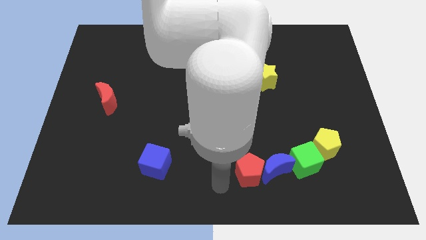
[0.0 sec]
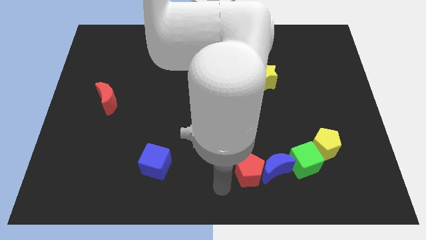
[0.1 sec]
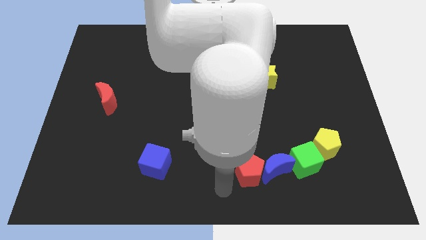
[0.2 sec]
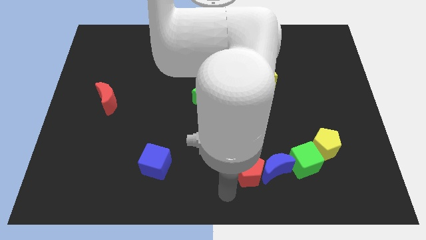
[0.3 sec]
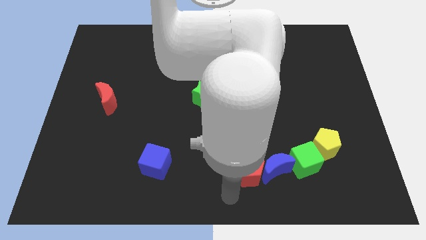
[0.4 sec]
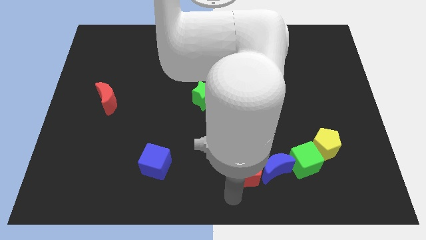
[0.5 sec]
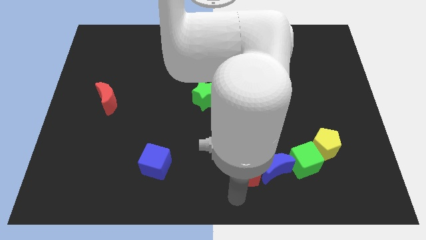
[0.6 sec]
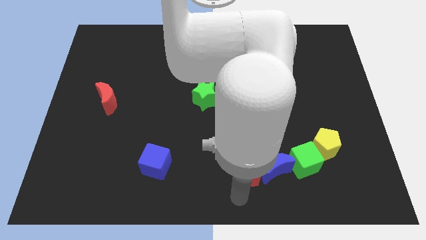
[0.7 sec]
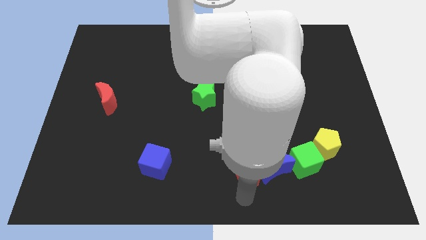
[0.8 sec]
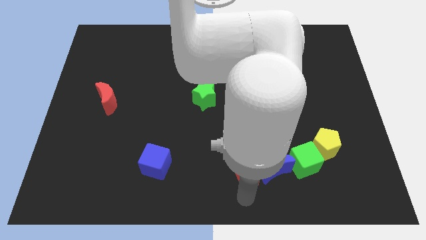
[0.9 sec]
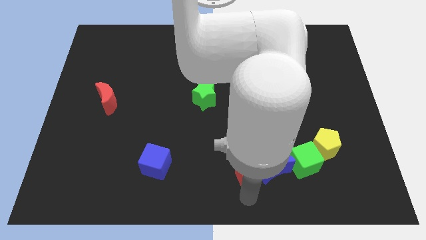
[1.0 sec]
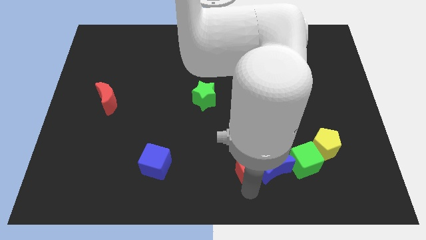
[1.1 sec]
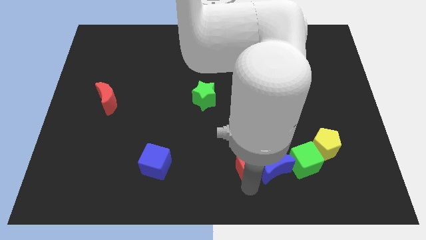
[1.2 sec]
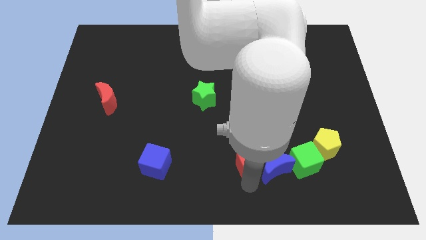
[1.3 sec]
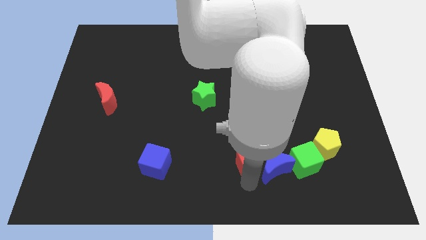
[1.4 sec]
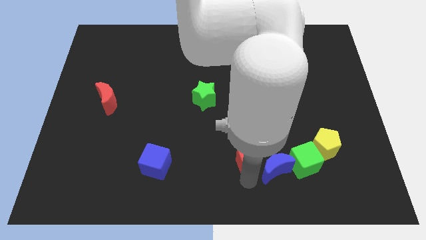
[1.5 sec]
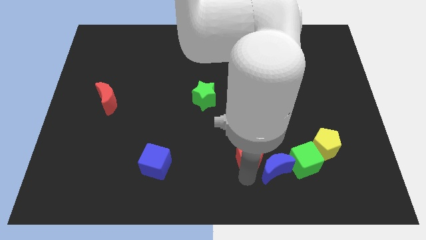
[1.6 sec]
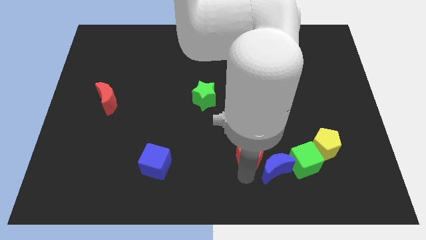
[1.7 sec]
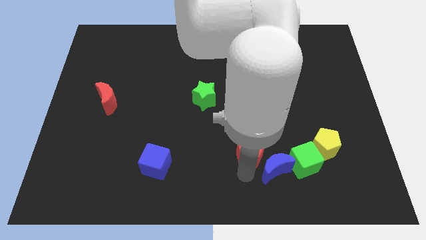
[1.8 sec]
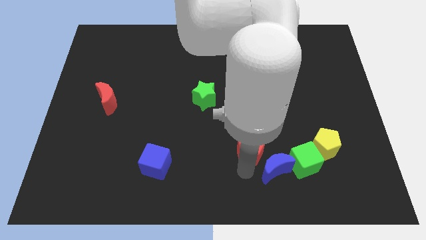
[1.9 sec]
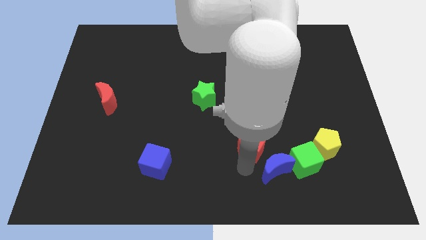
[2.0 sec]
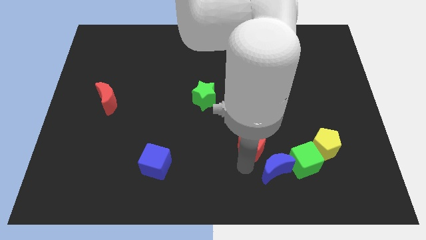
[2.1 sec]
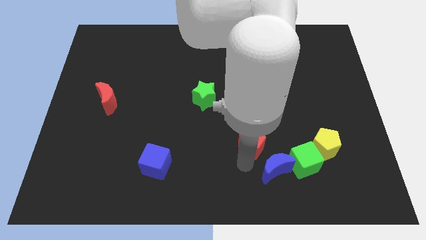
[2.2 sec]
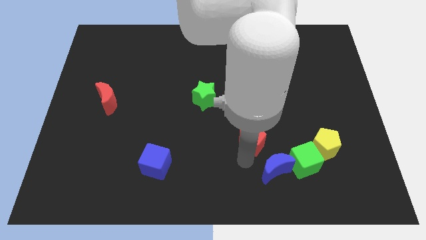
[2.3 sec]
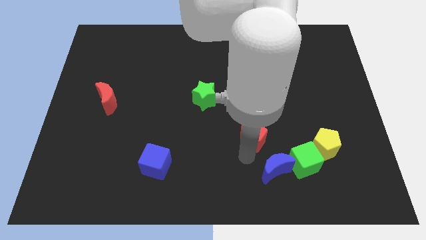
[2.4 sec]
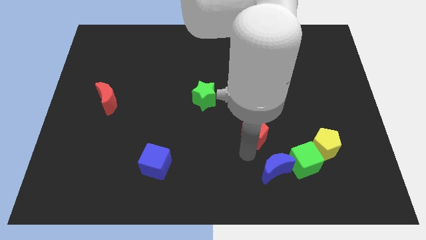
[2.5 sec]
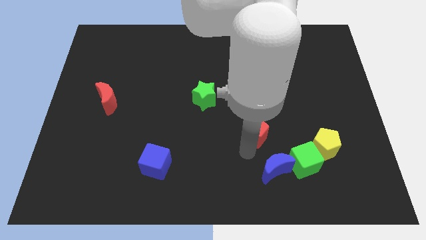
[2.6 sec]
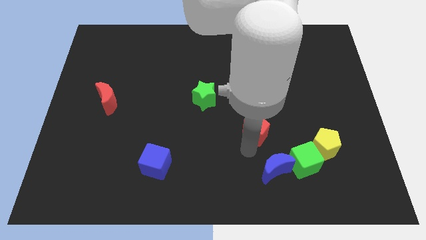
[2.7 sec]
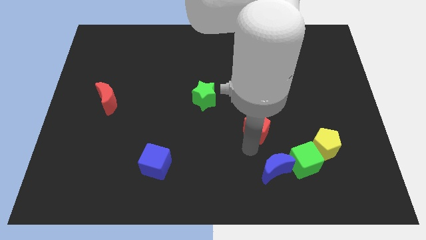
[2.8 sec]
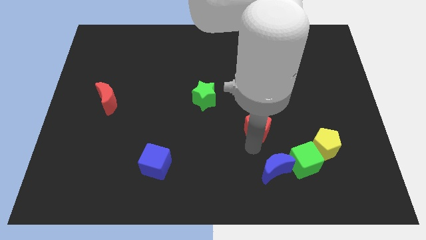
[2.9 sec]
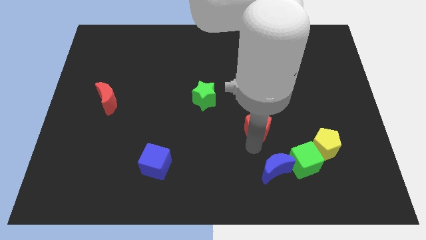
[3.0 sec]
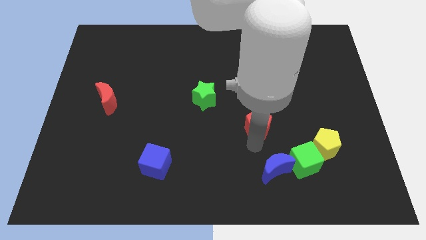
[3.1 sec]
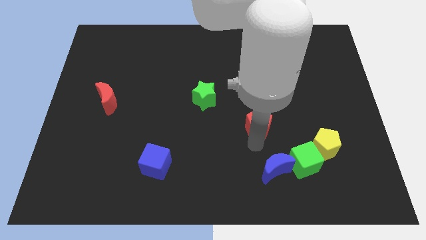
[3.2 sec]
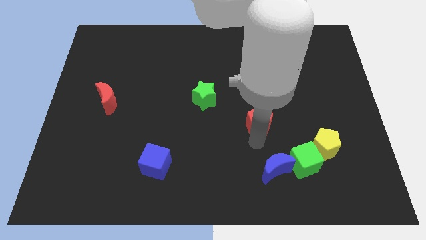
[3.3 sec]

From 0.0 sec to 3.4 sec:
place the red pentagon diagonal to the green star

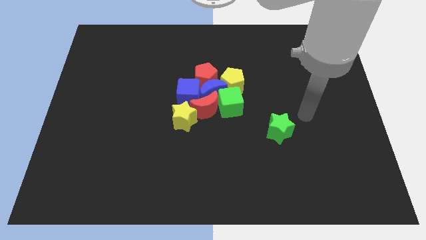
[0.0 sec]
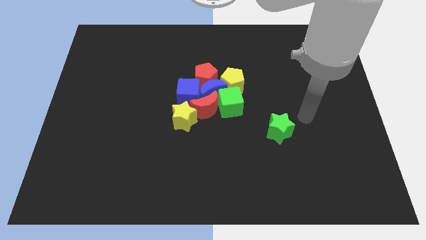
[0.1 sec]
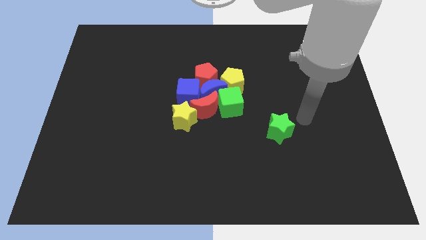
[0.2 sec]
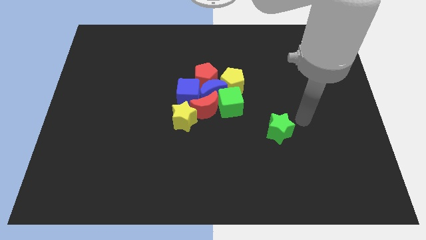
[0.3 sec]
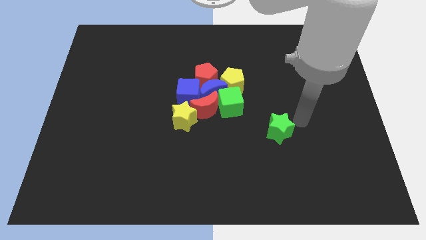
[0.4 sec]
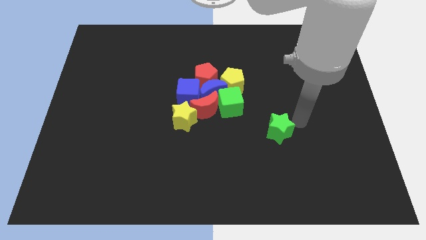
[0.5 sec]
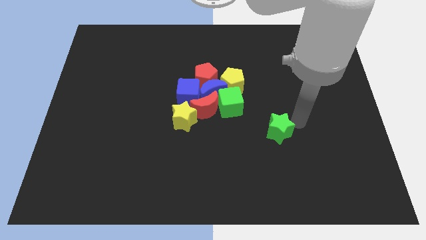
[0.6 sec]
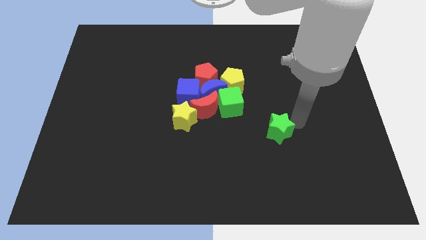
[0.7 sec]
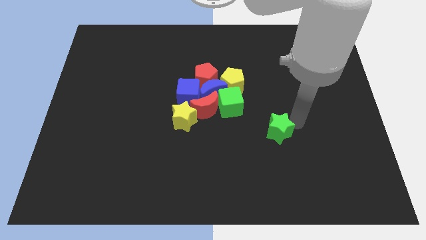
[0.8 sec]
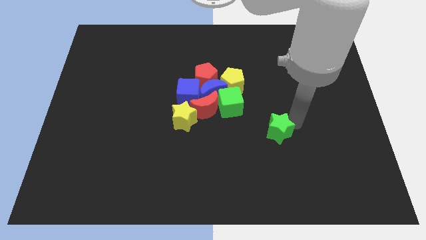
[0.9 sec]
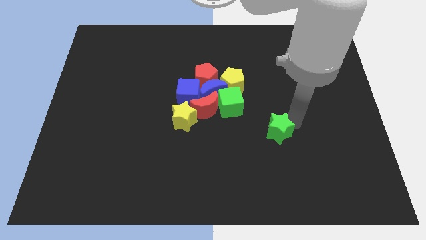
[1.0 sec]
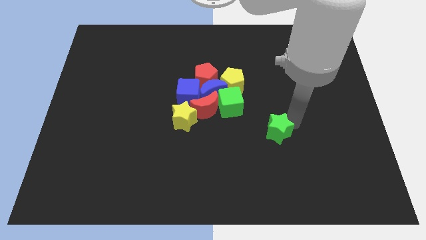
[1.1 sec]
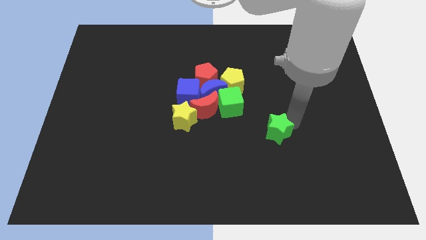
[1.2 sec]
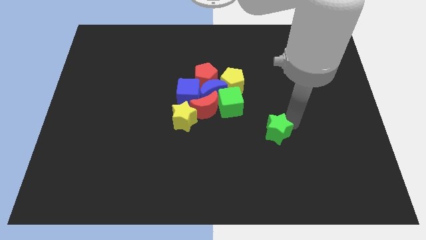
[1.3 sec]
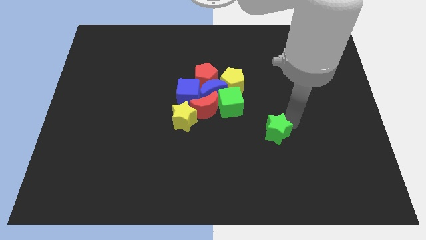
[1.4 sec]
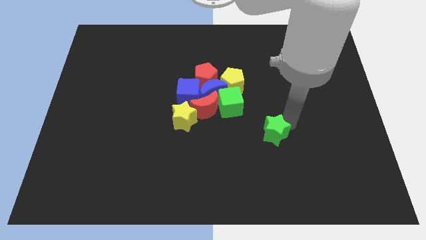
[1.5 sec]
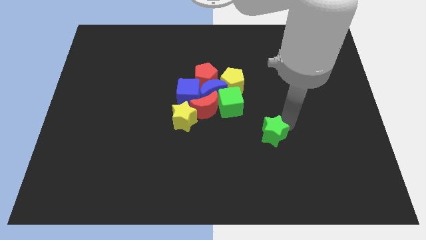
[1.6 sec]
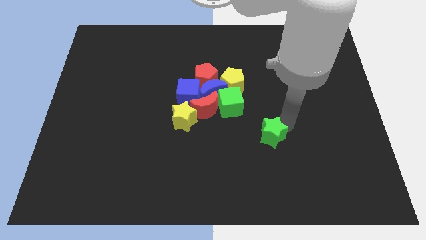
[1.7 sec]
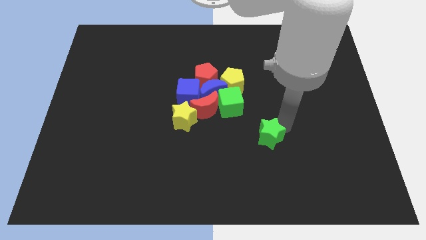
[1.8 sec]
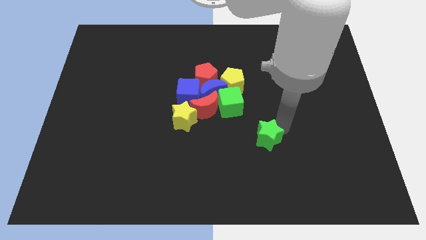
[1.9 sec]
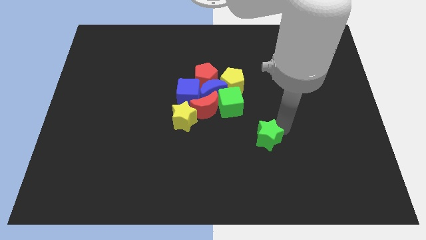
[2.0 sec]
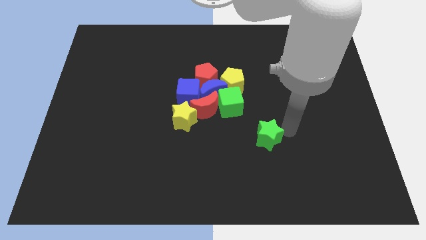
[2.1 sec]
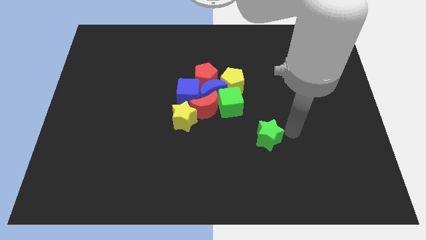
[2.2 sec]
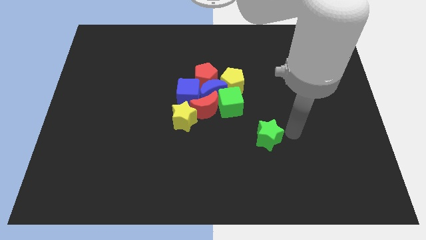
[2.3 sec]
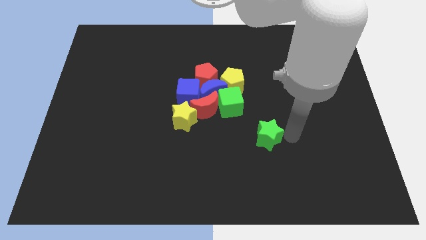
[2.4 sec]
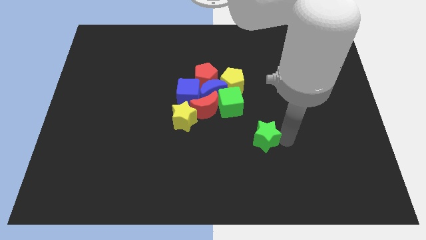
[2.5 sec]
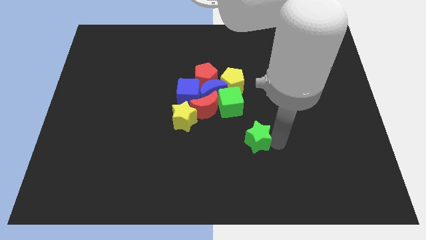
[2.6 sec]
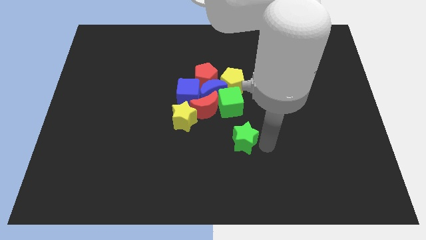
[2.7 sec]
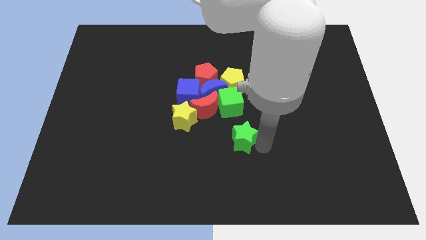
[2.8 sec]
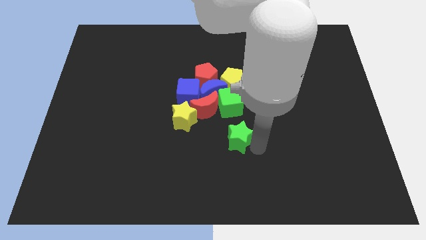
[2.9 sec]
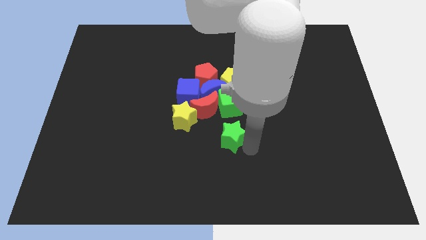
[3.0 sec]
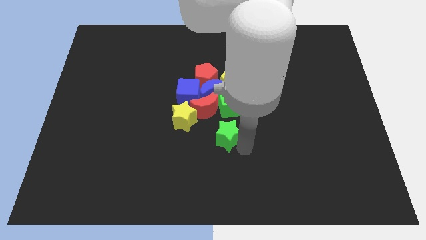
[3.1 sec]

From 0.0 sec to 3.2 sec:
push the green star towards the yellow star

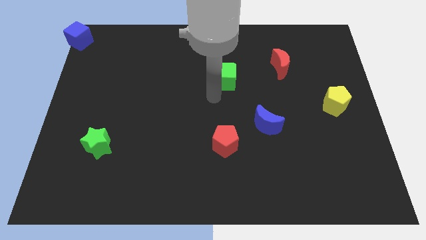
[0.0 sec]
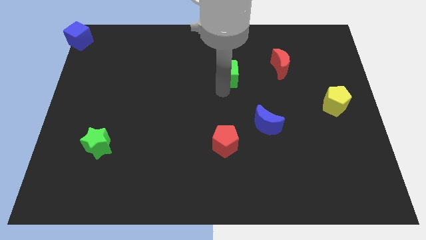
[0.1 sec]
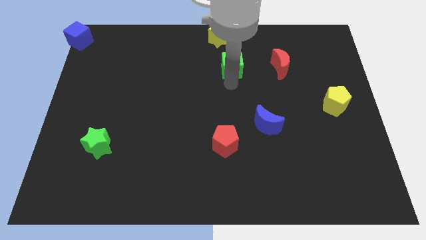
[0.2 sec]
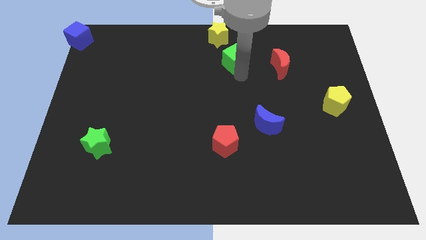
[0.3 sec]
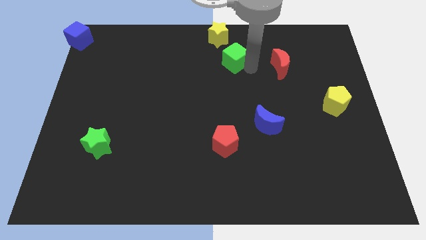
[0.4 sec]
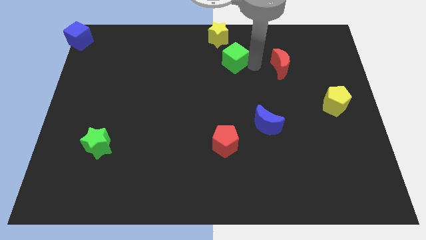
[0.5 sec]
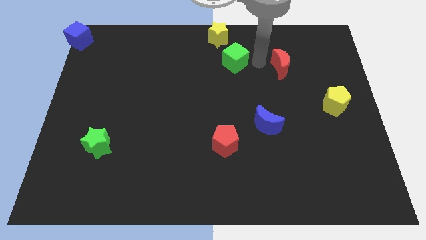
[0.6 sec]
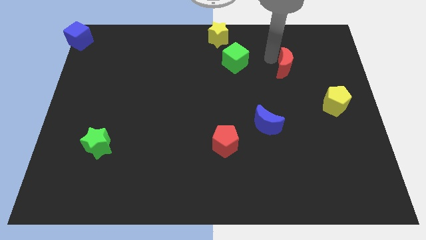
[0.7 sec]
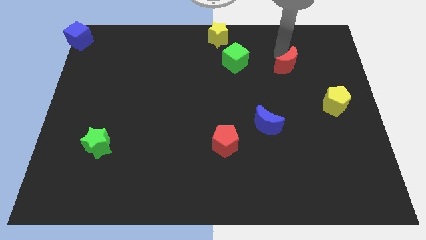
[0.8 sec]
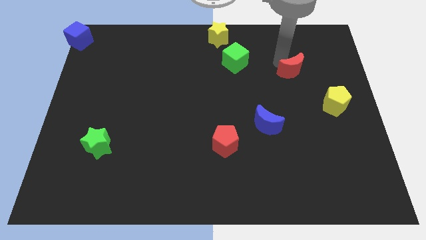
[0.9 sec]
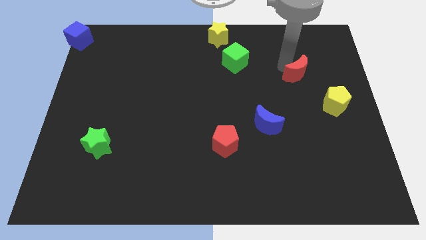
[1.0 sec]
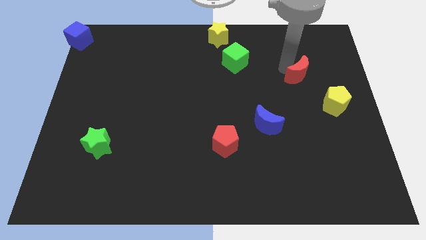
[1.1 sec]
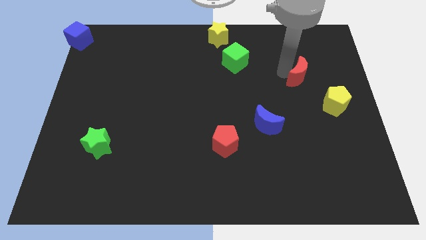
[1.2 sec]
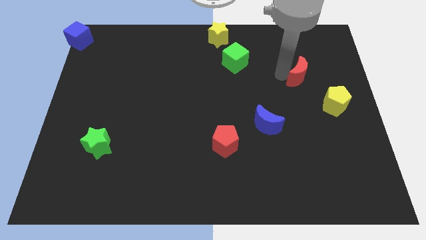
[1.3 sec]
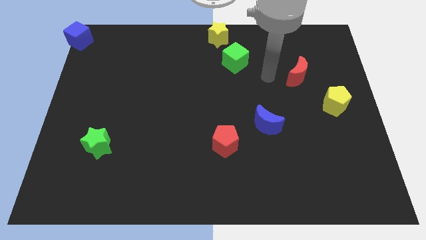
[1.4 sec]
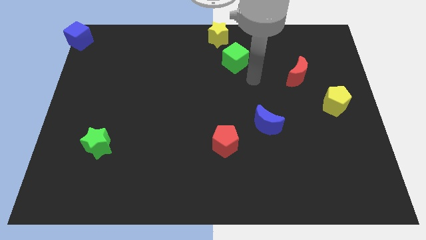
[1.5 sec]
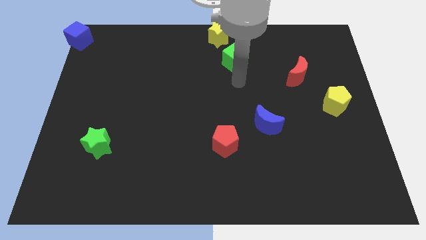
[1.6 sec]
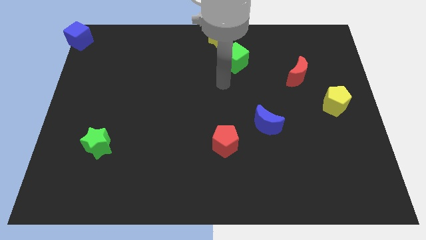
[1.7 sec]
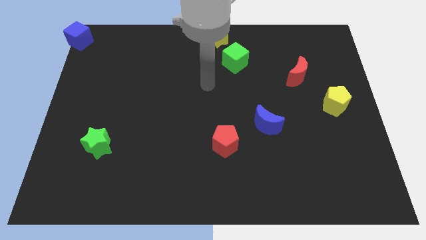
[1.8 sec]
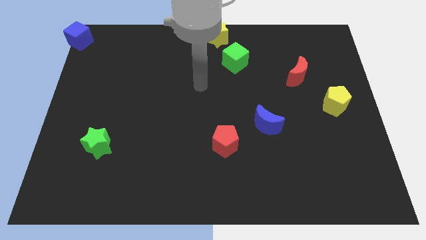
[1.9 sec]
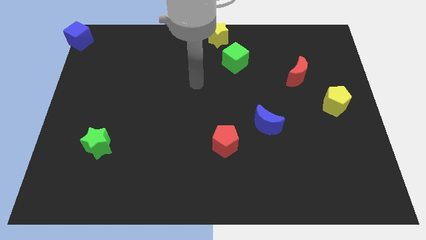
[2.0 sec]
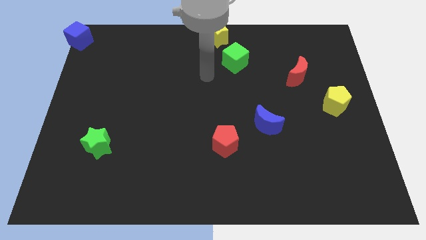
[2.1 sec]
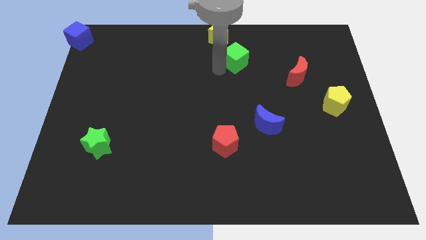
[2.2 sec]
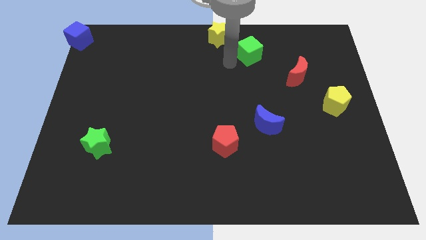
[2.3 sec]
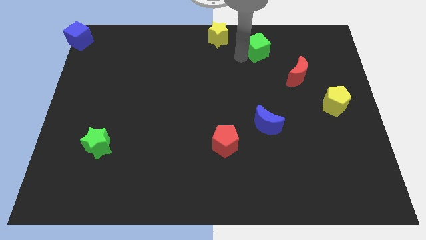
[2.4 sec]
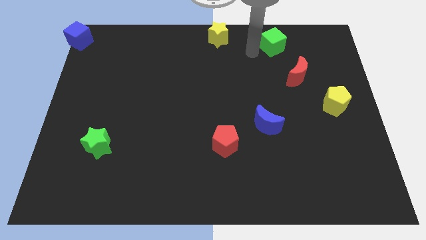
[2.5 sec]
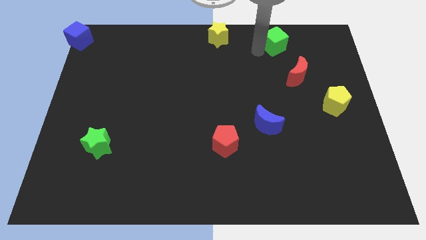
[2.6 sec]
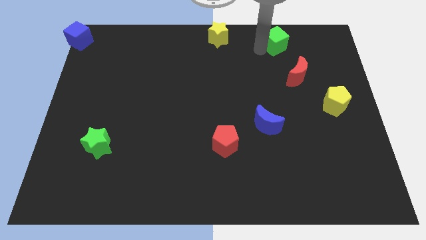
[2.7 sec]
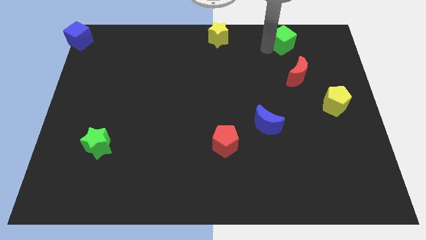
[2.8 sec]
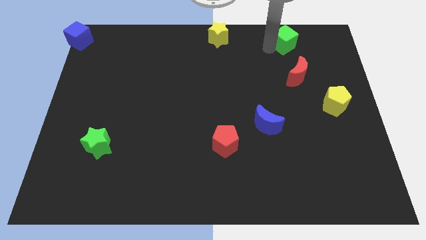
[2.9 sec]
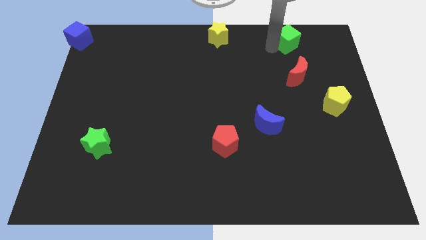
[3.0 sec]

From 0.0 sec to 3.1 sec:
push the green cube to the top side of the board
